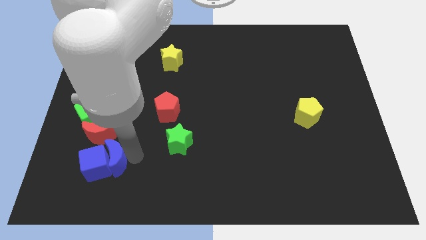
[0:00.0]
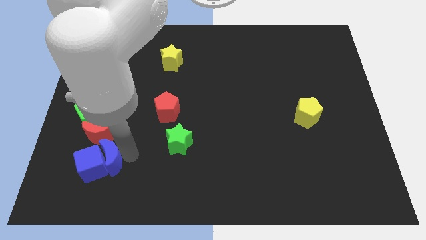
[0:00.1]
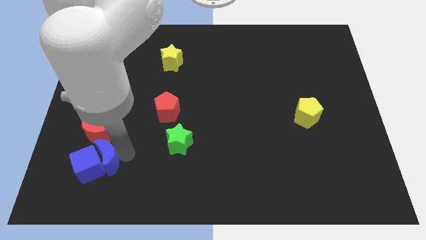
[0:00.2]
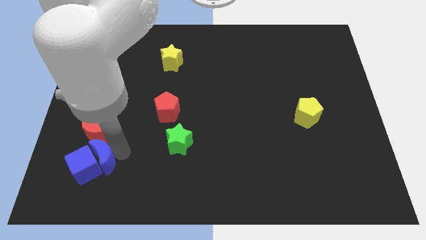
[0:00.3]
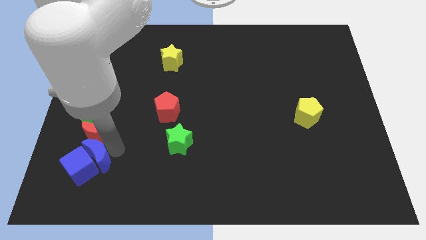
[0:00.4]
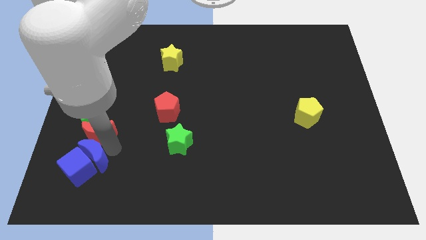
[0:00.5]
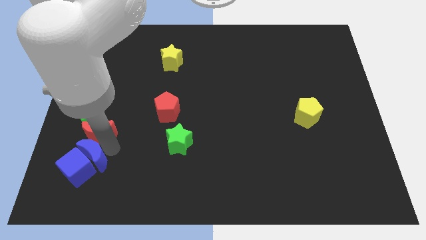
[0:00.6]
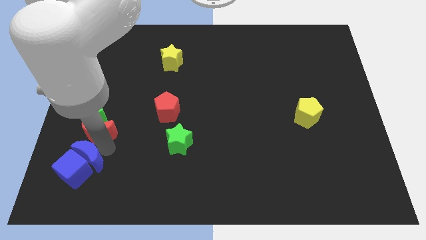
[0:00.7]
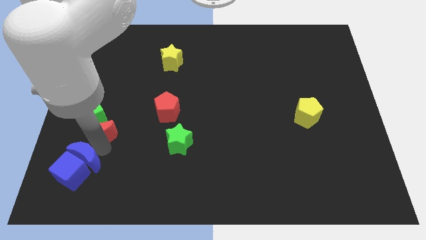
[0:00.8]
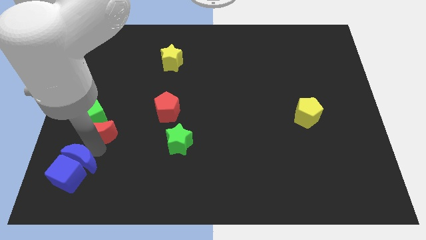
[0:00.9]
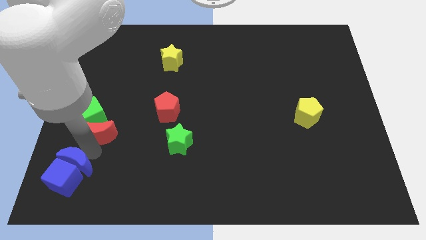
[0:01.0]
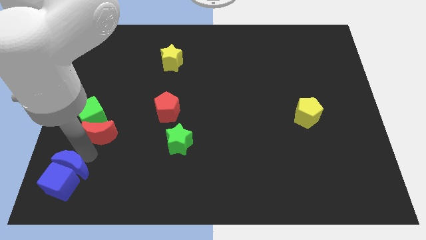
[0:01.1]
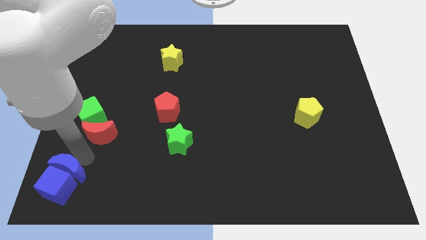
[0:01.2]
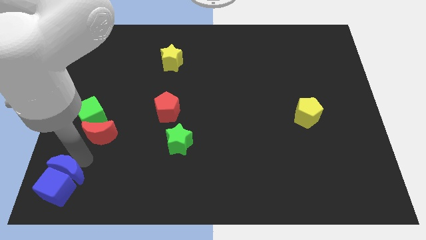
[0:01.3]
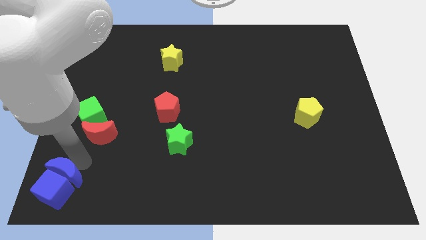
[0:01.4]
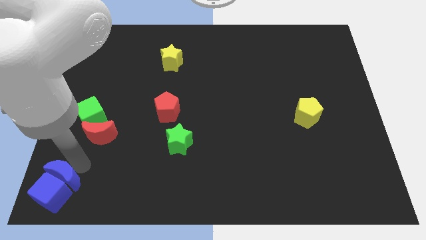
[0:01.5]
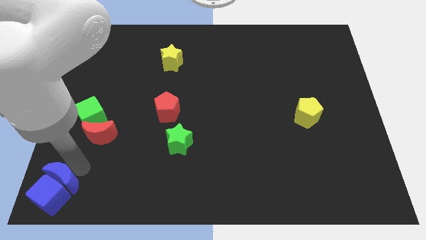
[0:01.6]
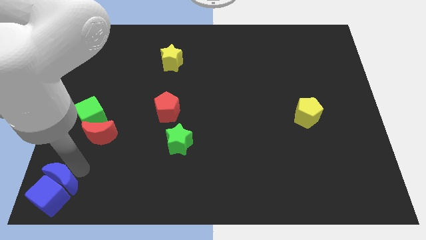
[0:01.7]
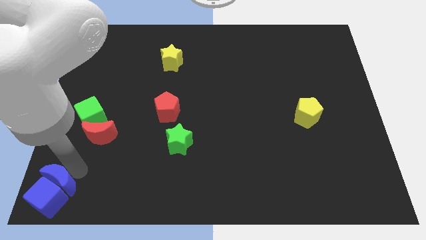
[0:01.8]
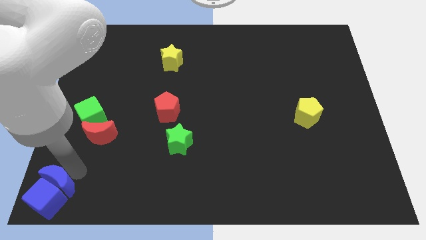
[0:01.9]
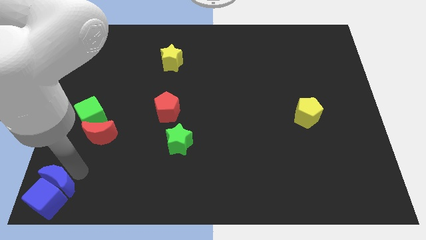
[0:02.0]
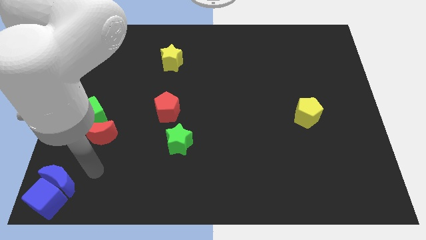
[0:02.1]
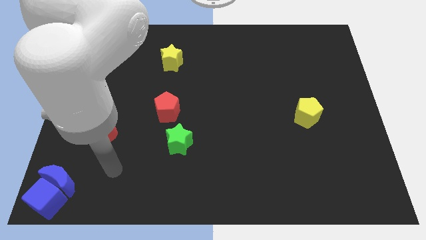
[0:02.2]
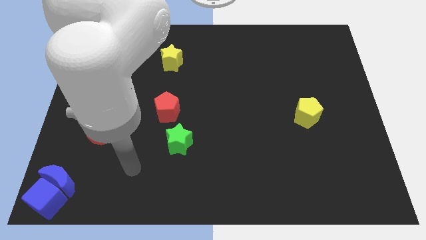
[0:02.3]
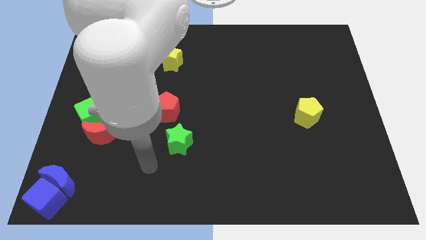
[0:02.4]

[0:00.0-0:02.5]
move the blue crescent along the blue cube to the bottom left to the board

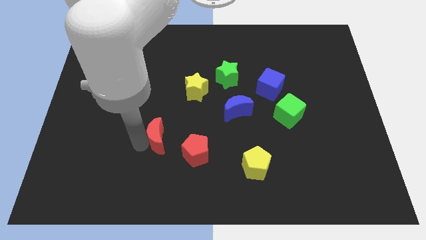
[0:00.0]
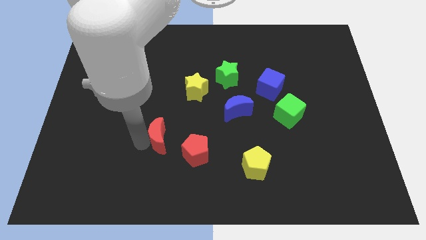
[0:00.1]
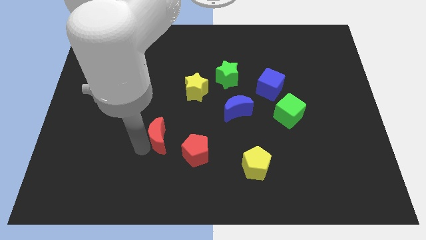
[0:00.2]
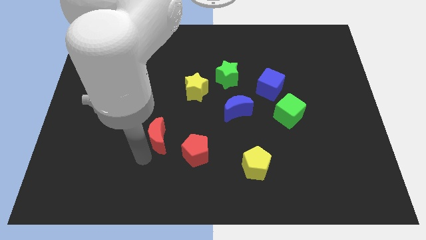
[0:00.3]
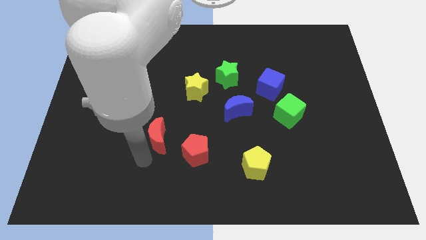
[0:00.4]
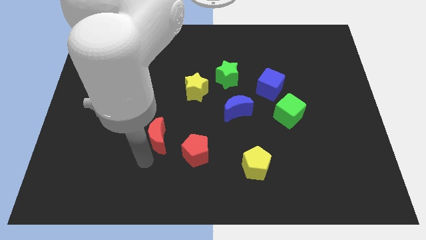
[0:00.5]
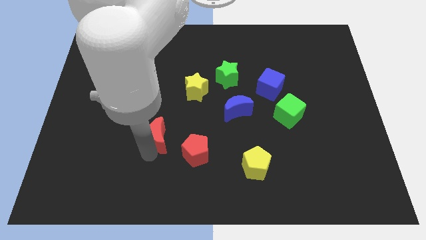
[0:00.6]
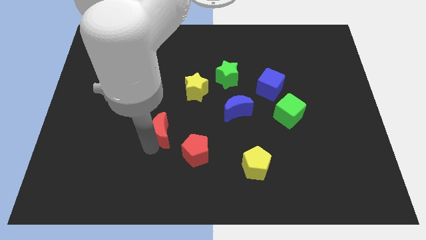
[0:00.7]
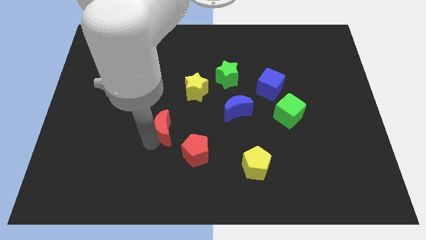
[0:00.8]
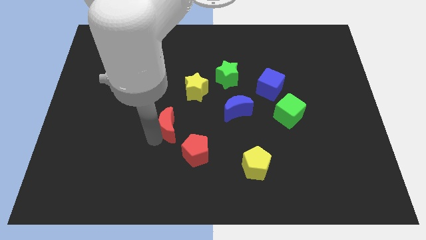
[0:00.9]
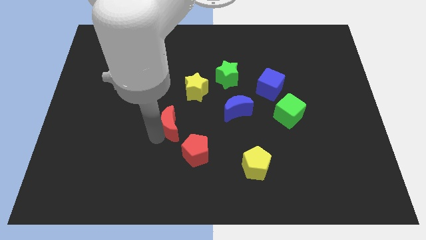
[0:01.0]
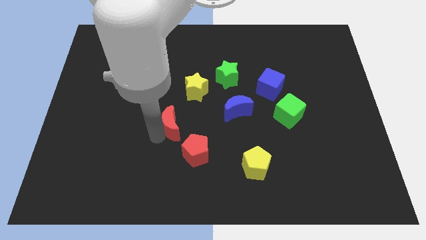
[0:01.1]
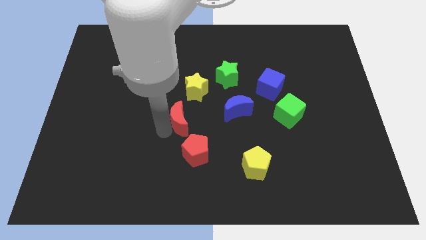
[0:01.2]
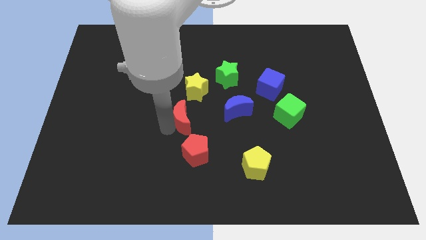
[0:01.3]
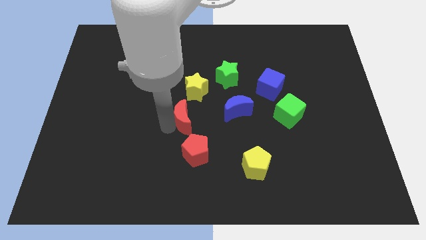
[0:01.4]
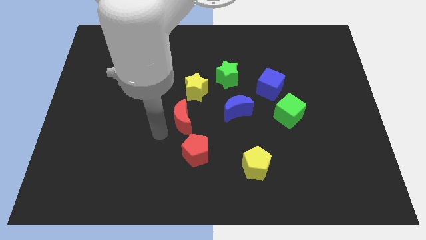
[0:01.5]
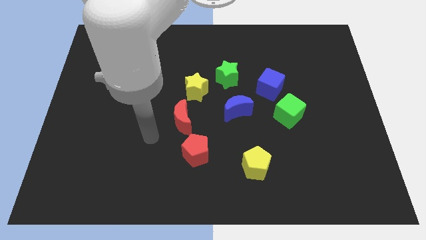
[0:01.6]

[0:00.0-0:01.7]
move the red crescent towards the center

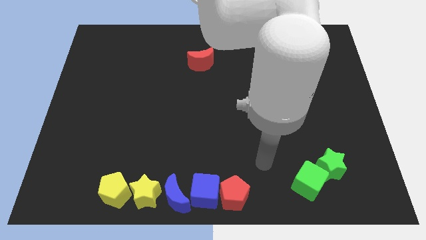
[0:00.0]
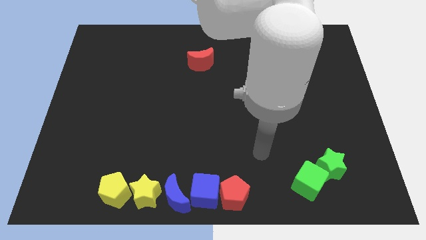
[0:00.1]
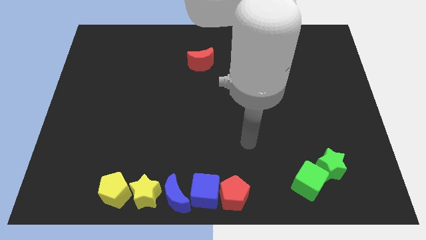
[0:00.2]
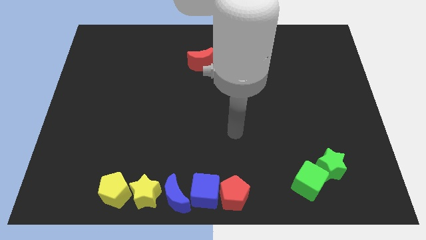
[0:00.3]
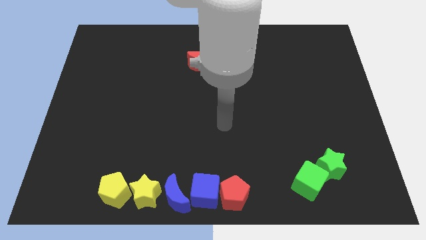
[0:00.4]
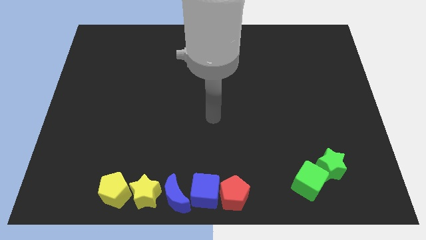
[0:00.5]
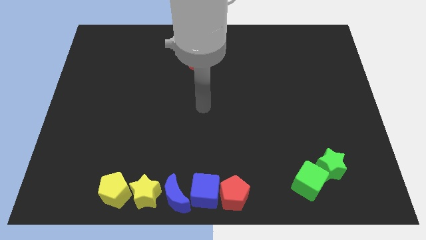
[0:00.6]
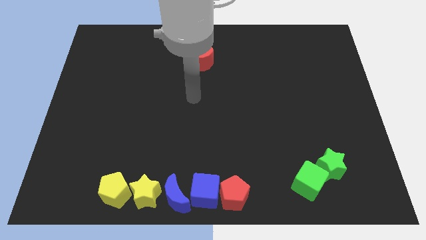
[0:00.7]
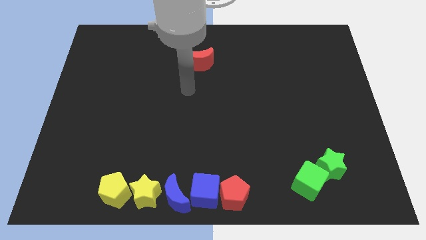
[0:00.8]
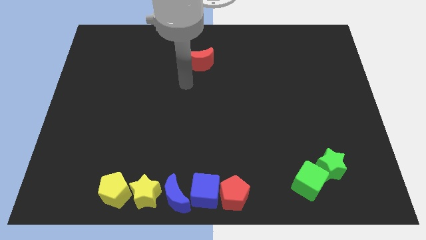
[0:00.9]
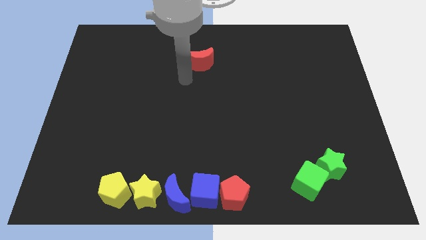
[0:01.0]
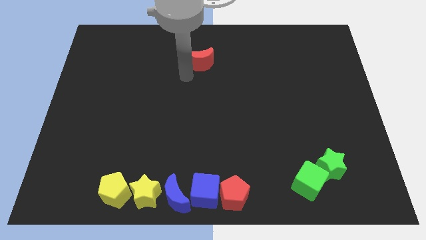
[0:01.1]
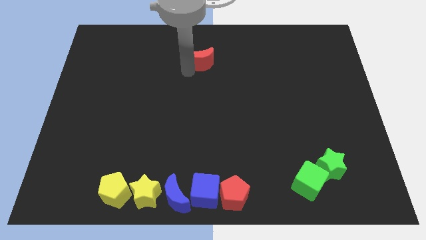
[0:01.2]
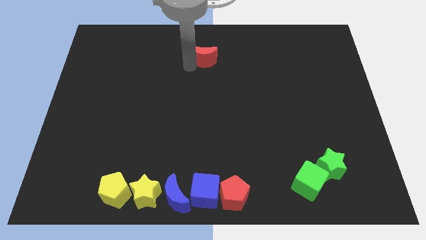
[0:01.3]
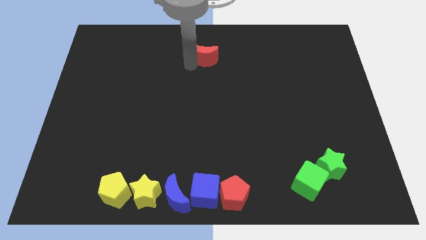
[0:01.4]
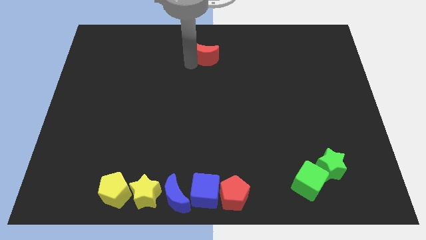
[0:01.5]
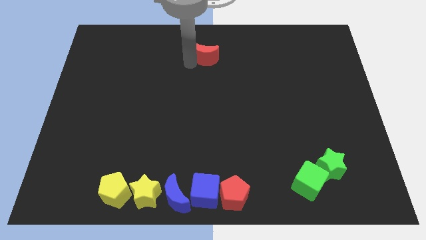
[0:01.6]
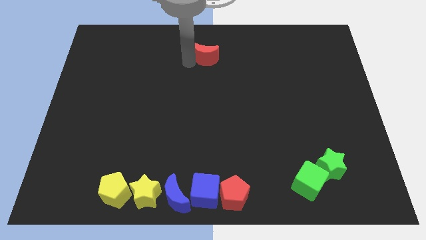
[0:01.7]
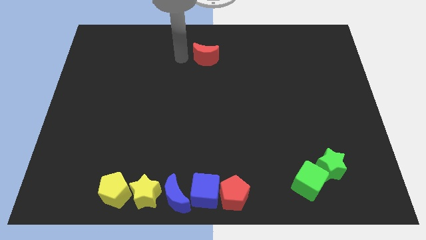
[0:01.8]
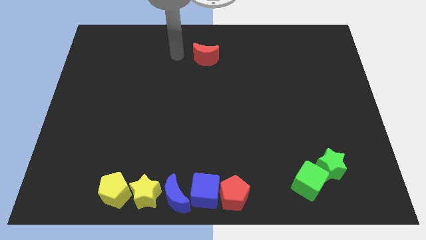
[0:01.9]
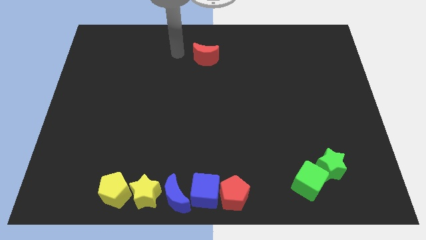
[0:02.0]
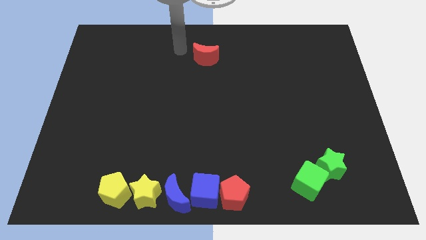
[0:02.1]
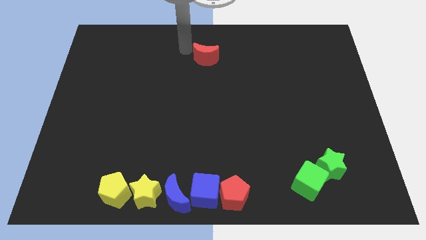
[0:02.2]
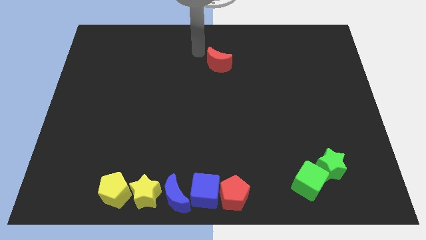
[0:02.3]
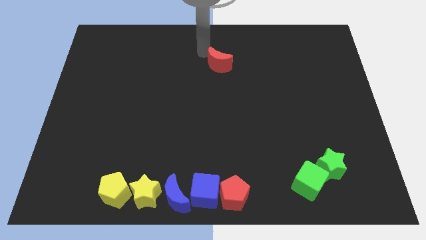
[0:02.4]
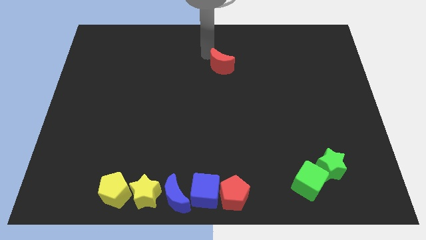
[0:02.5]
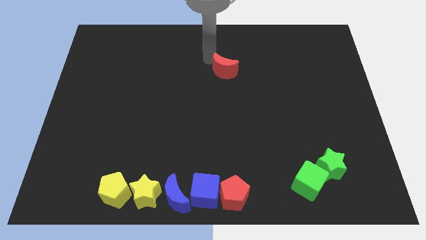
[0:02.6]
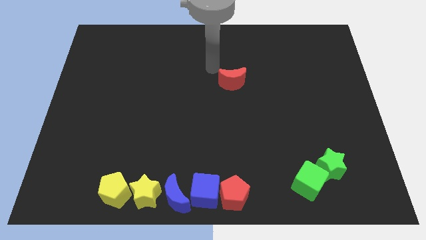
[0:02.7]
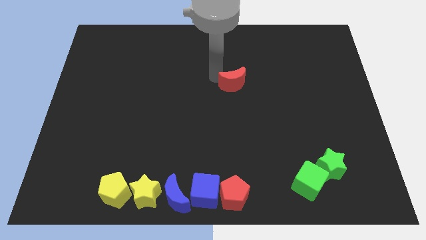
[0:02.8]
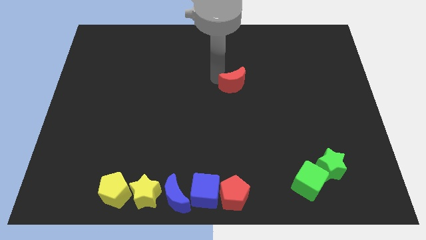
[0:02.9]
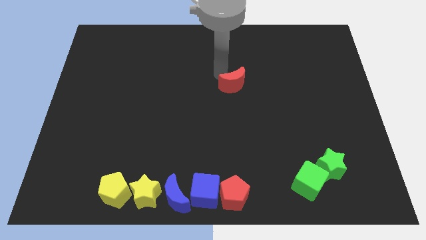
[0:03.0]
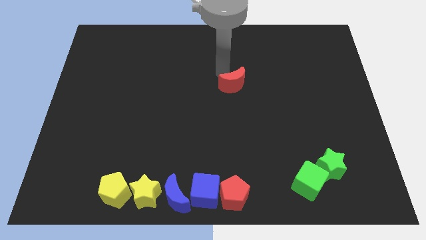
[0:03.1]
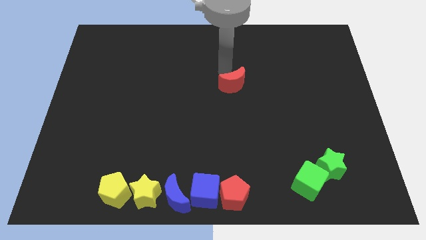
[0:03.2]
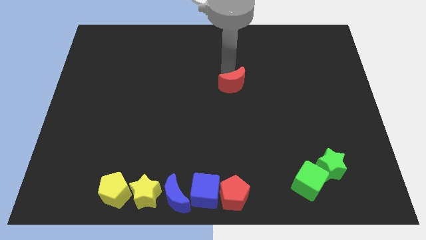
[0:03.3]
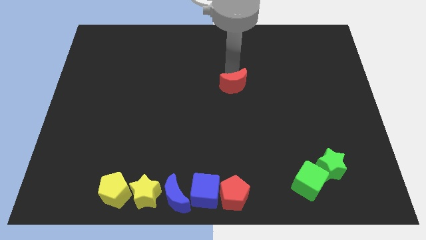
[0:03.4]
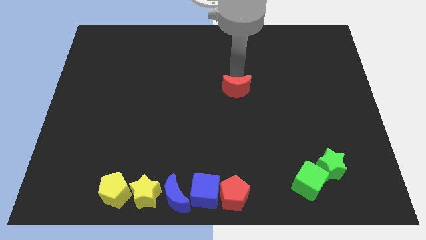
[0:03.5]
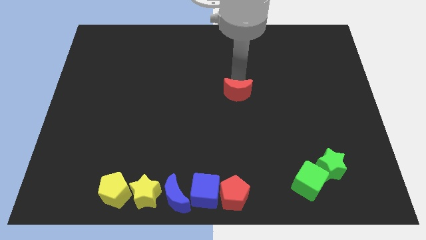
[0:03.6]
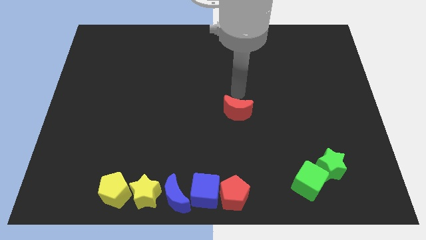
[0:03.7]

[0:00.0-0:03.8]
push the red moon towards the center of the board

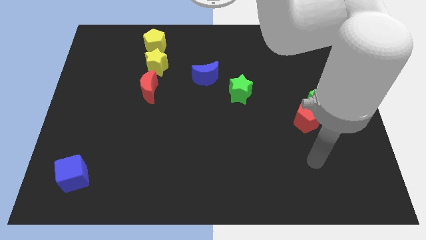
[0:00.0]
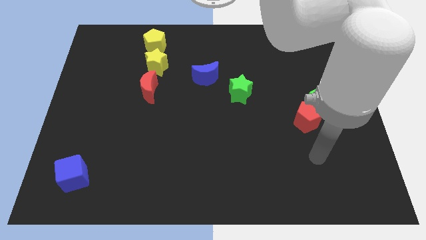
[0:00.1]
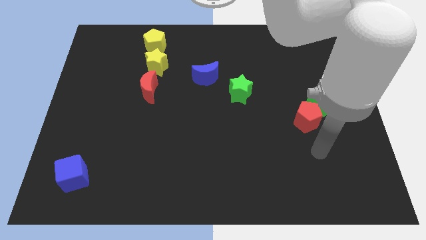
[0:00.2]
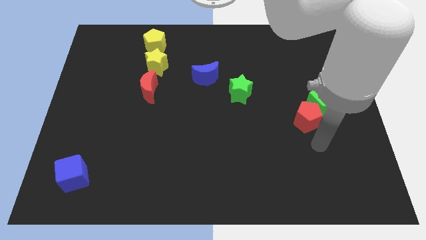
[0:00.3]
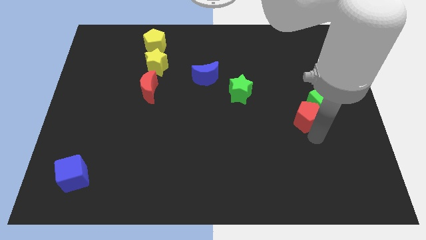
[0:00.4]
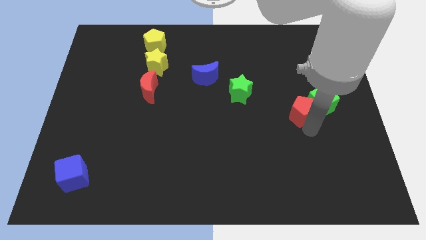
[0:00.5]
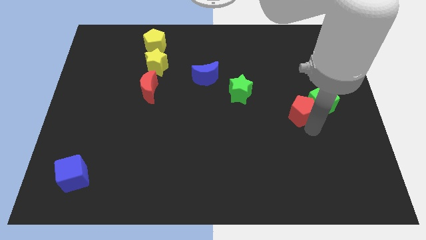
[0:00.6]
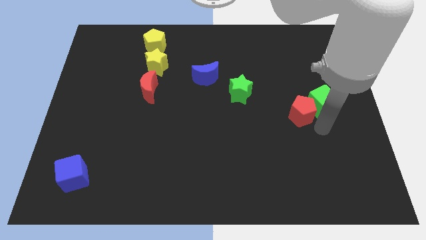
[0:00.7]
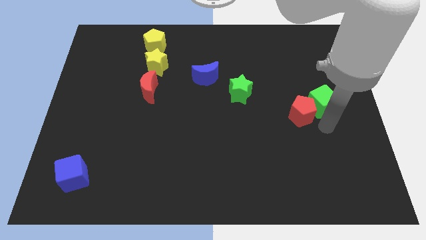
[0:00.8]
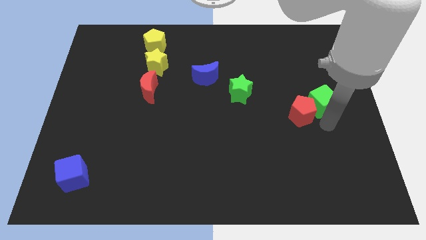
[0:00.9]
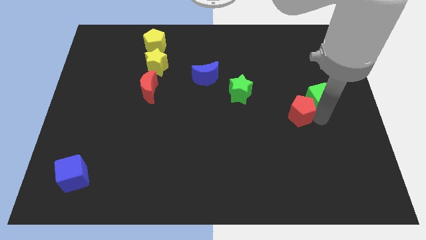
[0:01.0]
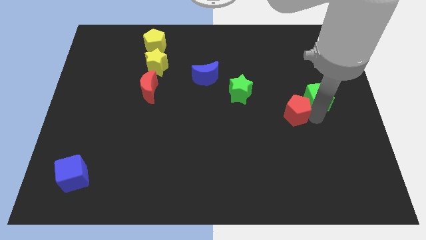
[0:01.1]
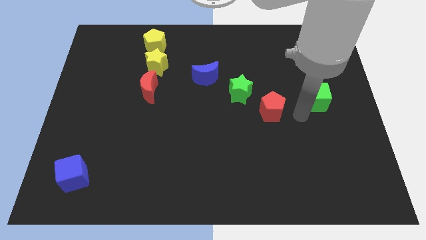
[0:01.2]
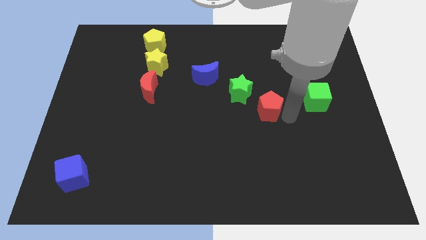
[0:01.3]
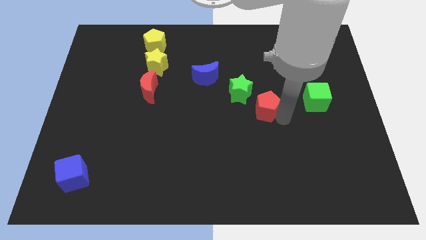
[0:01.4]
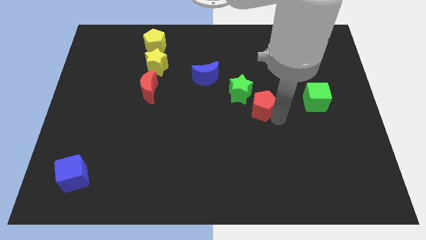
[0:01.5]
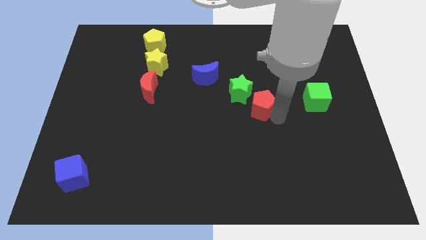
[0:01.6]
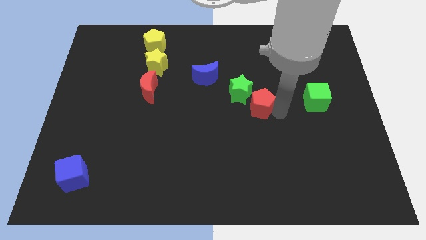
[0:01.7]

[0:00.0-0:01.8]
separate the red pentagon from the green cube
